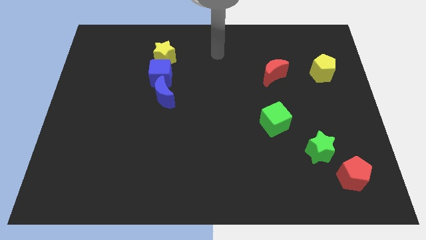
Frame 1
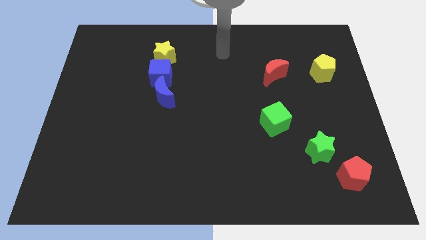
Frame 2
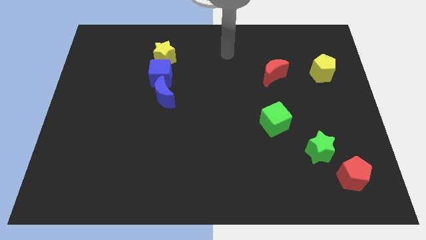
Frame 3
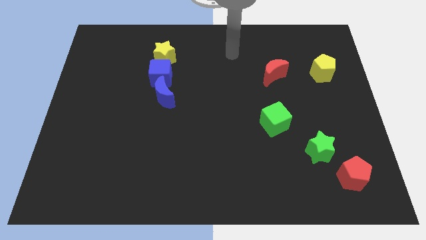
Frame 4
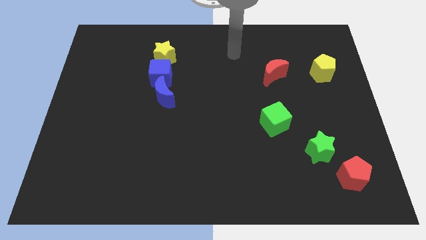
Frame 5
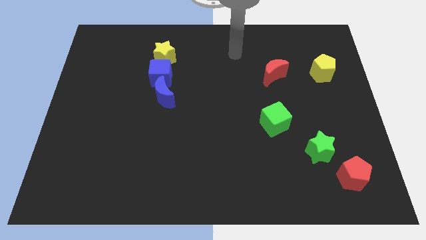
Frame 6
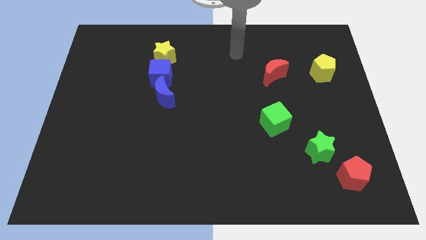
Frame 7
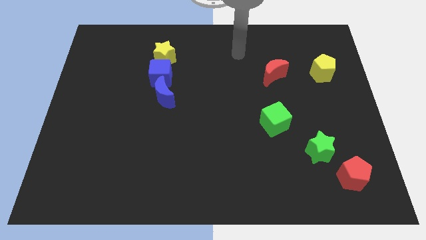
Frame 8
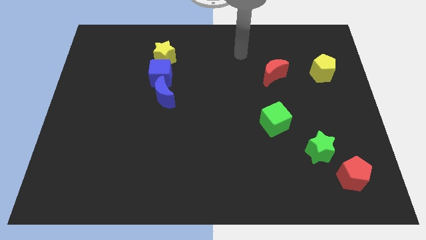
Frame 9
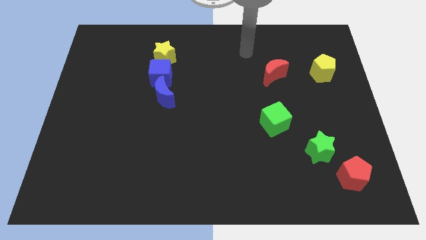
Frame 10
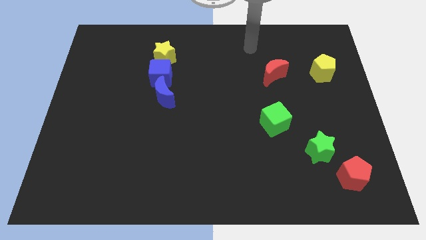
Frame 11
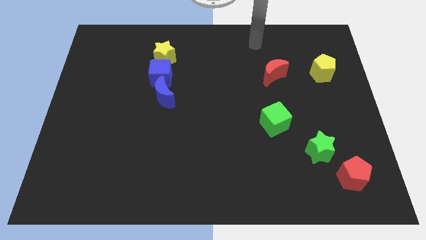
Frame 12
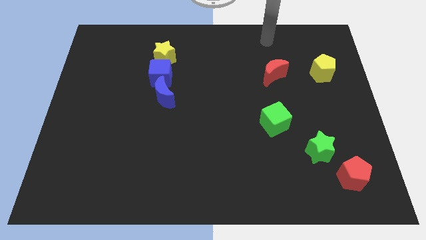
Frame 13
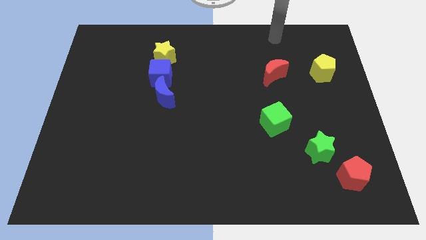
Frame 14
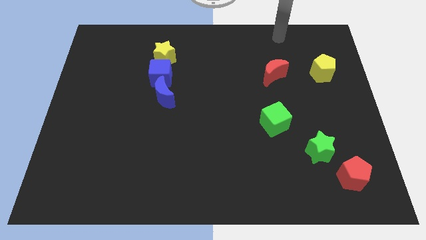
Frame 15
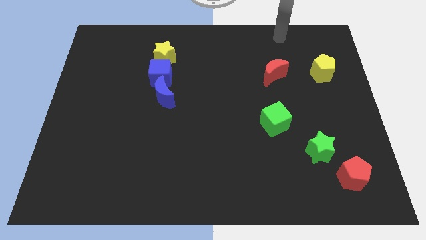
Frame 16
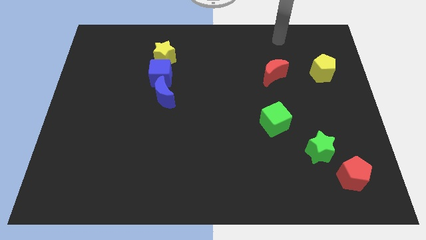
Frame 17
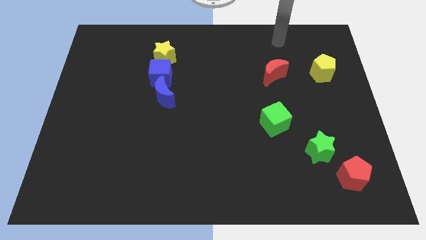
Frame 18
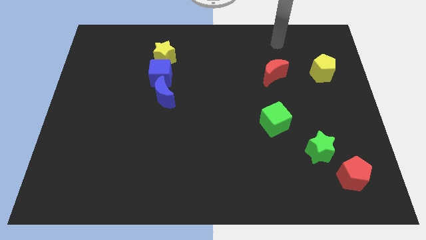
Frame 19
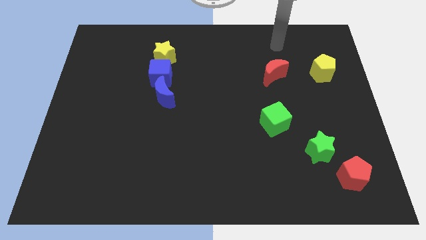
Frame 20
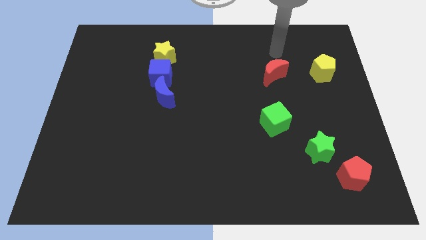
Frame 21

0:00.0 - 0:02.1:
slide your arm on top of red moon

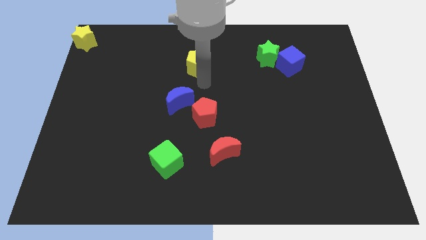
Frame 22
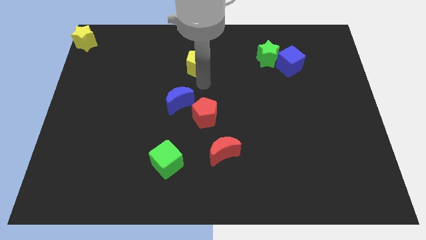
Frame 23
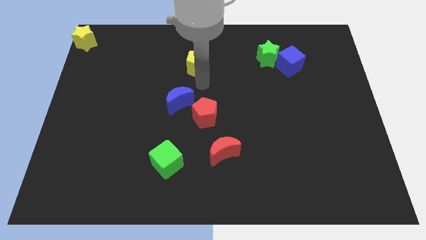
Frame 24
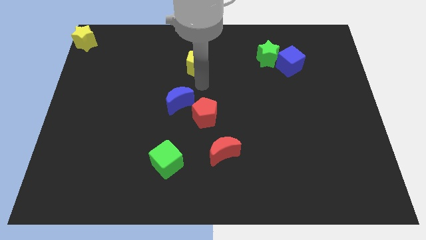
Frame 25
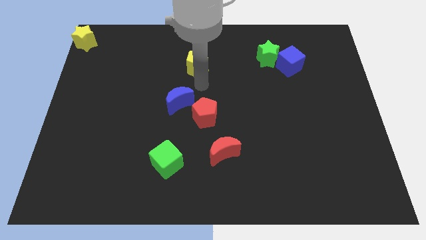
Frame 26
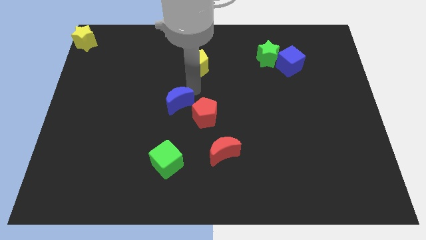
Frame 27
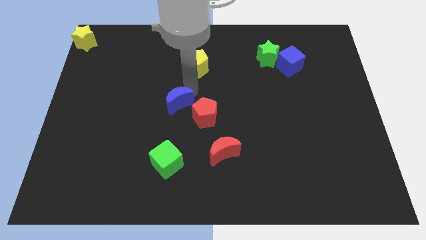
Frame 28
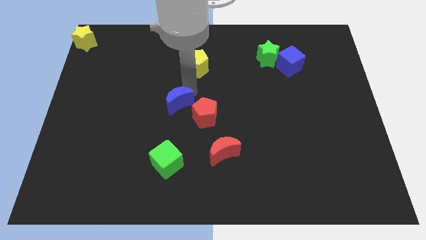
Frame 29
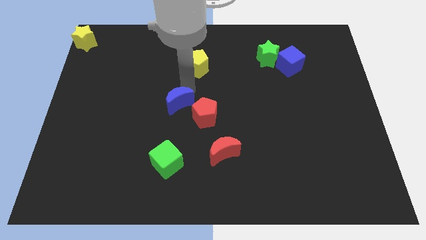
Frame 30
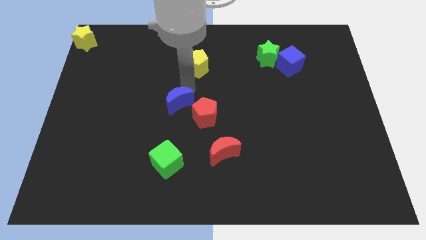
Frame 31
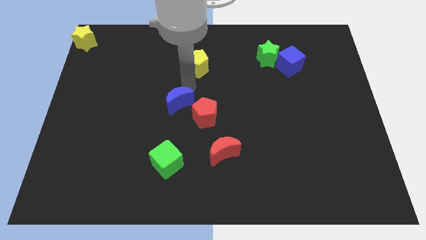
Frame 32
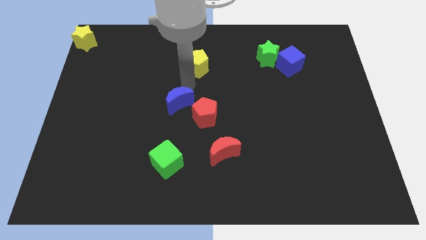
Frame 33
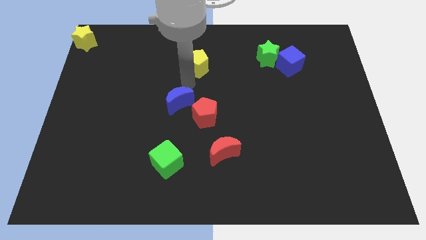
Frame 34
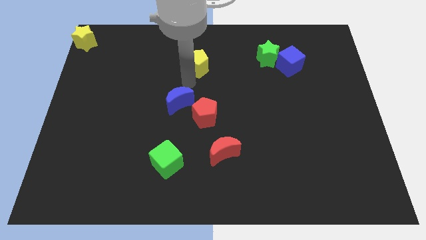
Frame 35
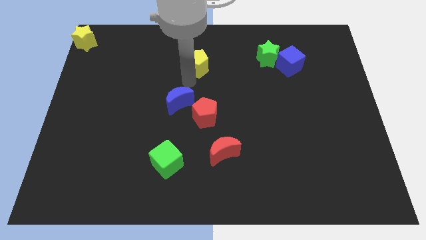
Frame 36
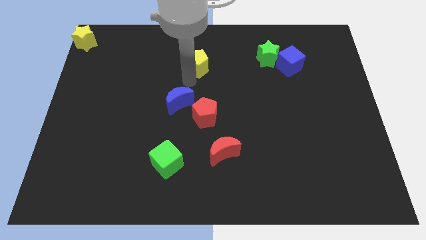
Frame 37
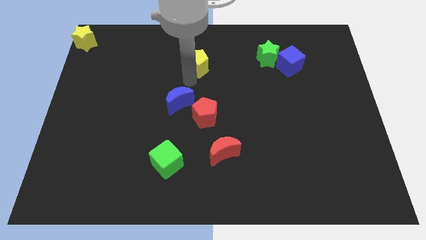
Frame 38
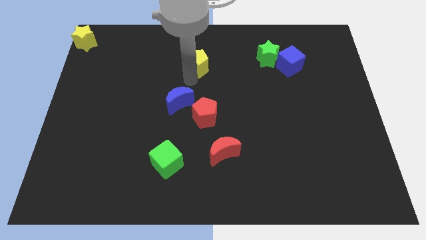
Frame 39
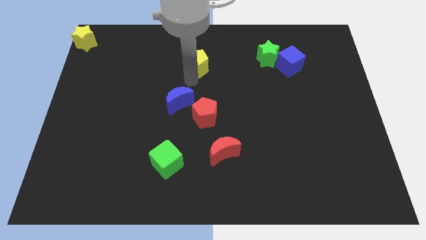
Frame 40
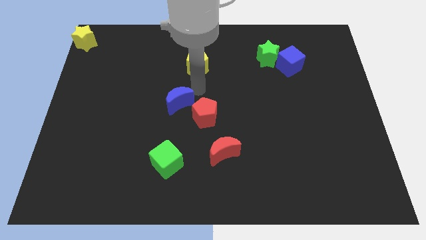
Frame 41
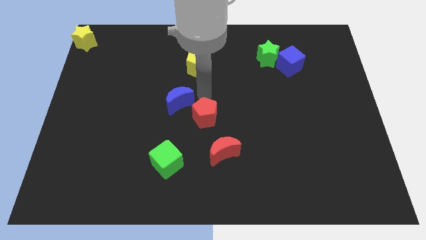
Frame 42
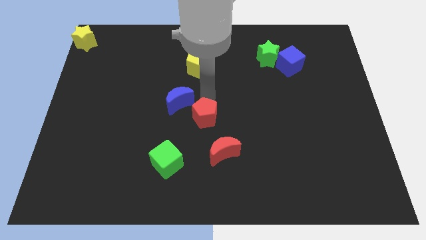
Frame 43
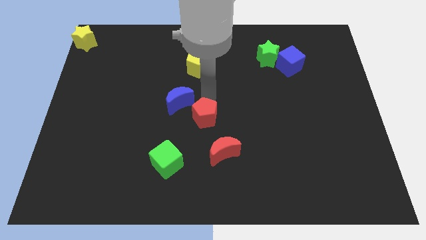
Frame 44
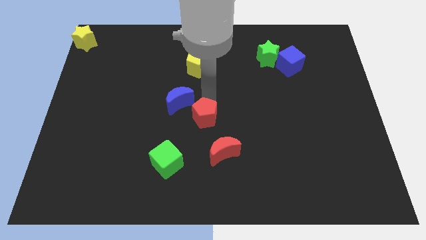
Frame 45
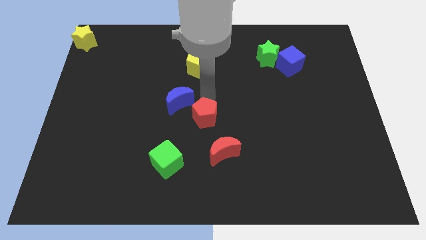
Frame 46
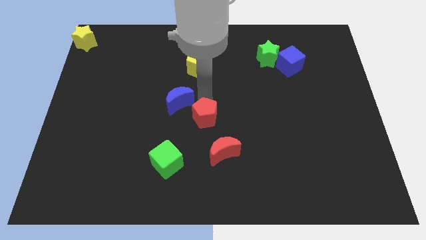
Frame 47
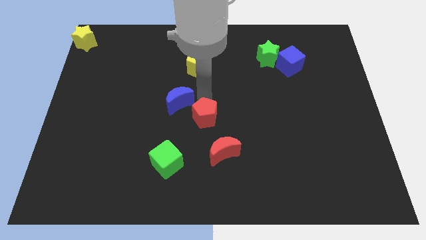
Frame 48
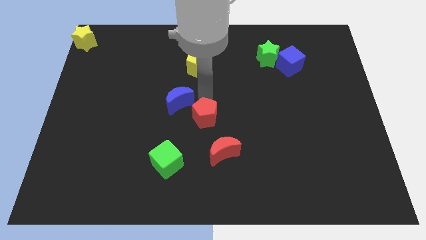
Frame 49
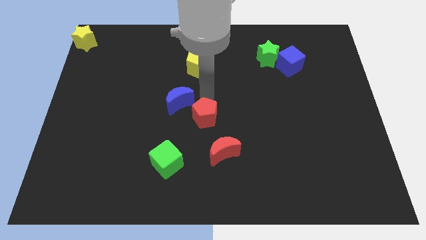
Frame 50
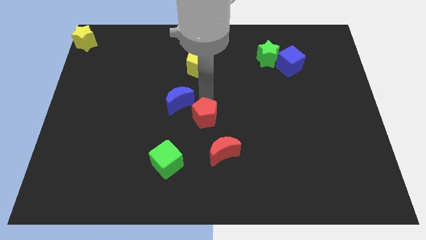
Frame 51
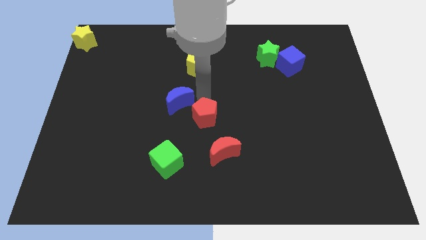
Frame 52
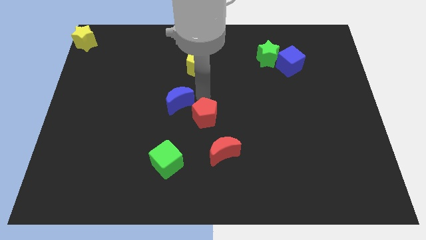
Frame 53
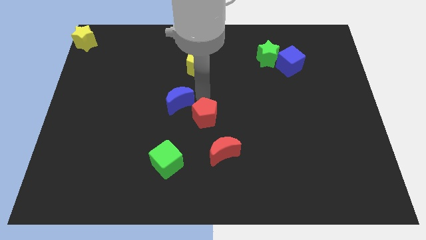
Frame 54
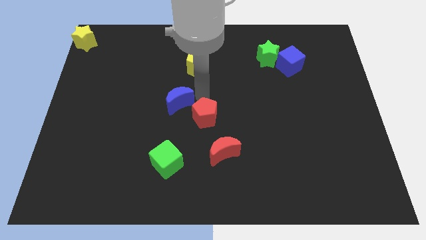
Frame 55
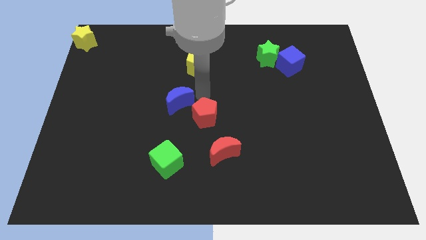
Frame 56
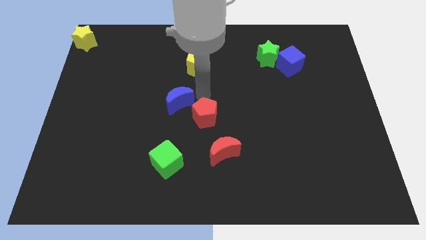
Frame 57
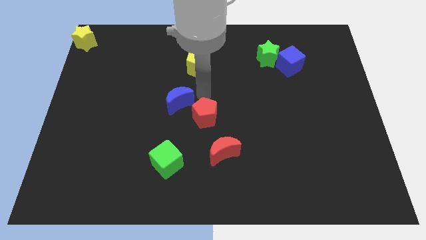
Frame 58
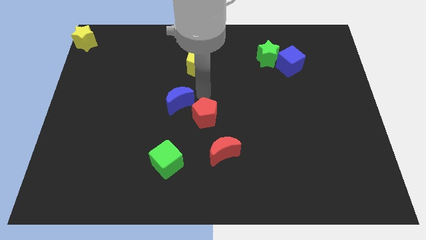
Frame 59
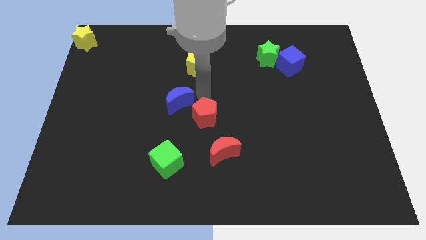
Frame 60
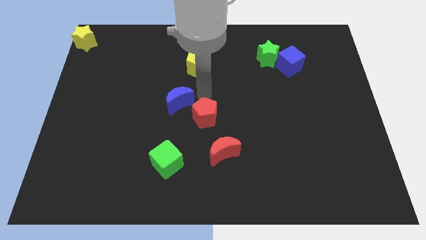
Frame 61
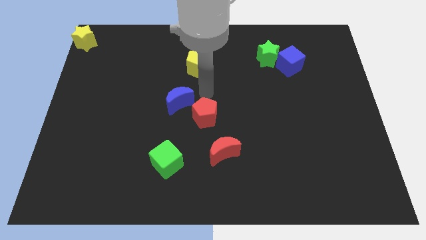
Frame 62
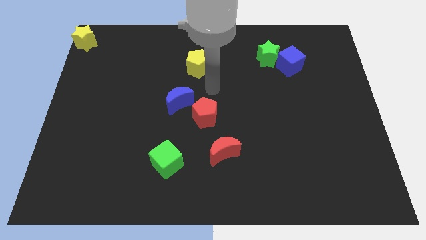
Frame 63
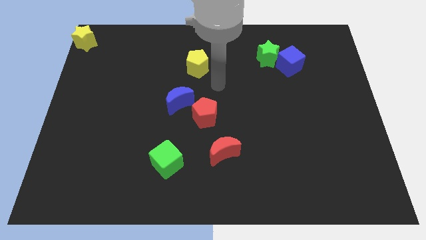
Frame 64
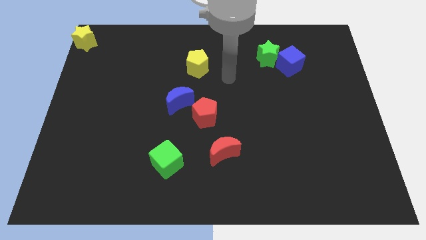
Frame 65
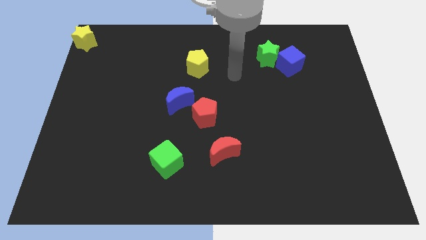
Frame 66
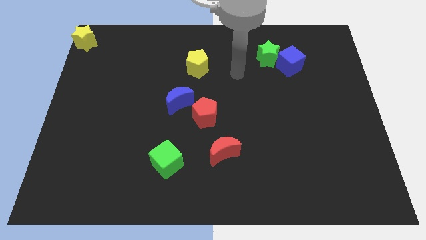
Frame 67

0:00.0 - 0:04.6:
move your arm in between the blocks at the center of the board

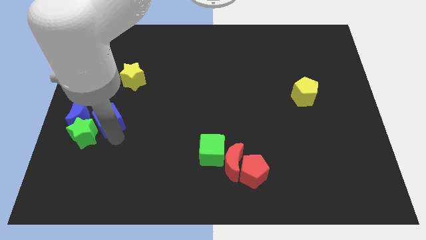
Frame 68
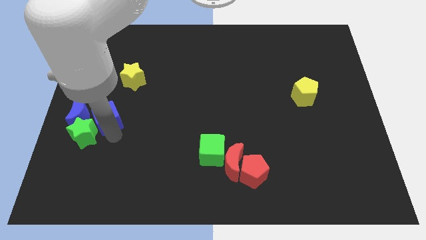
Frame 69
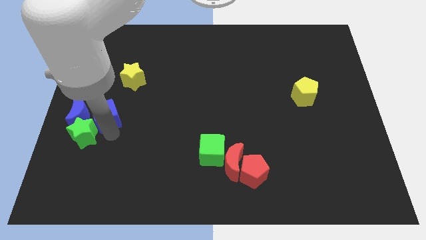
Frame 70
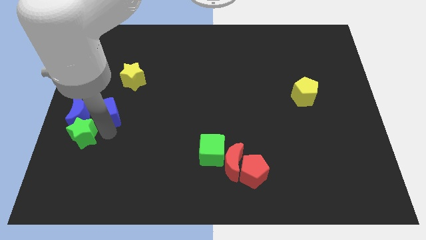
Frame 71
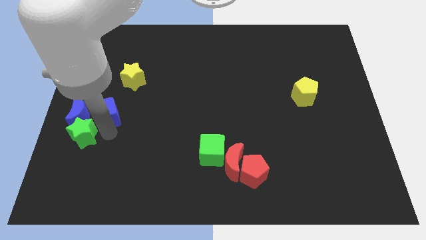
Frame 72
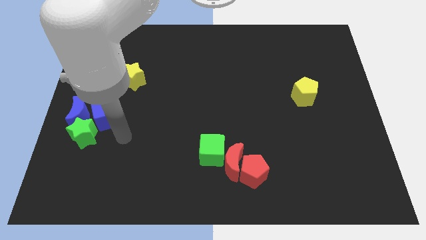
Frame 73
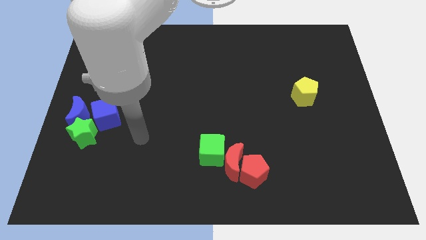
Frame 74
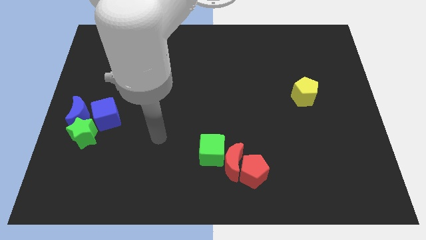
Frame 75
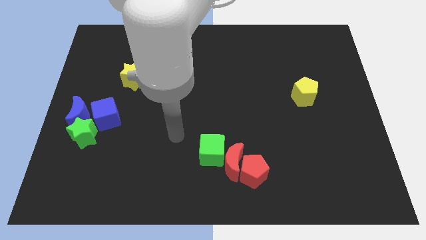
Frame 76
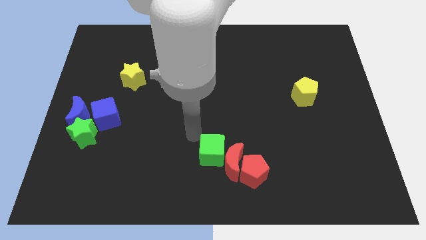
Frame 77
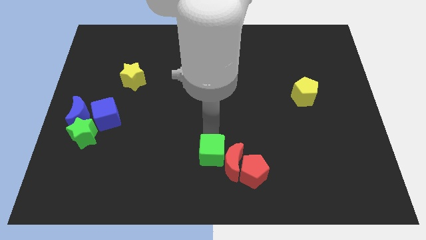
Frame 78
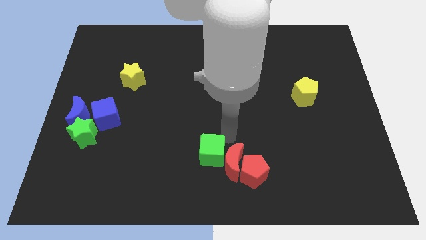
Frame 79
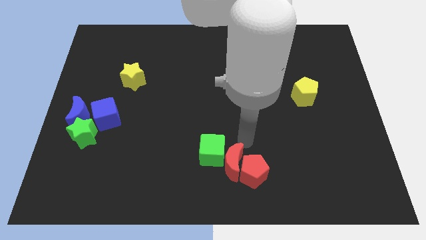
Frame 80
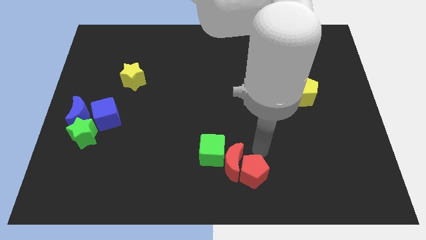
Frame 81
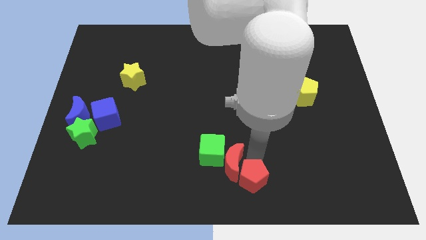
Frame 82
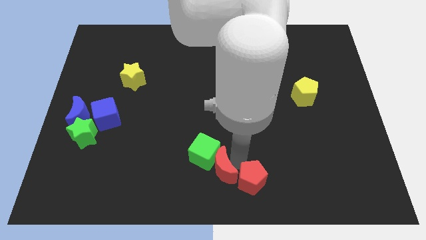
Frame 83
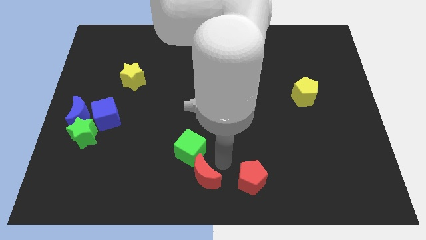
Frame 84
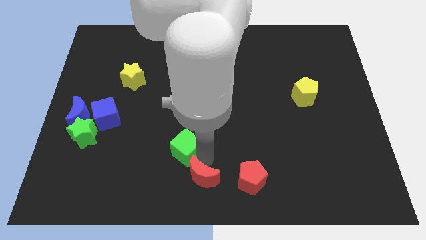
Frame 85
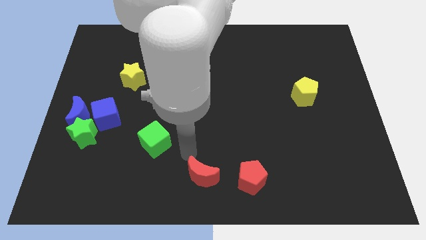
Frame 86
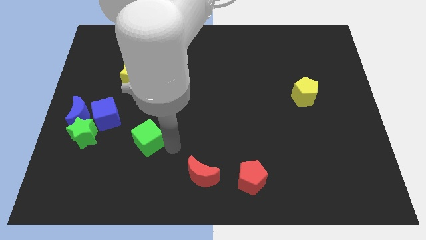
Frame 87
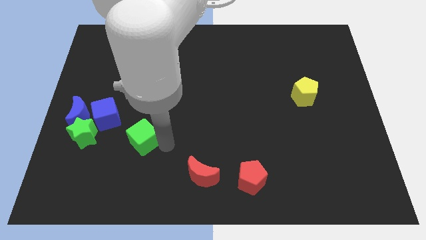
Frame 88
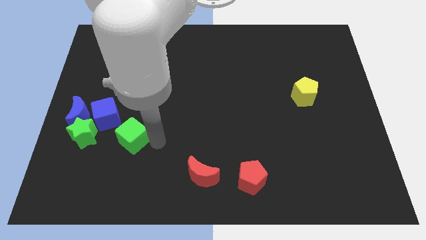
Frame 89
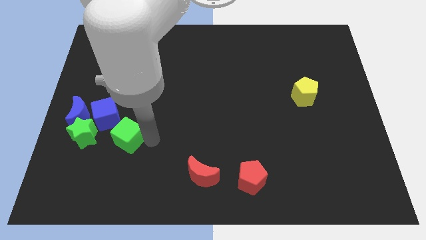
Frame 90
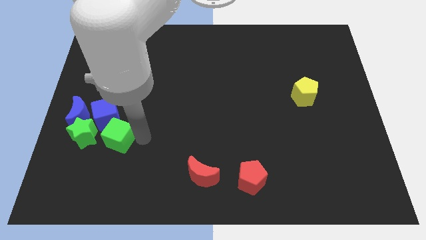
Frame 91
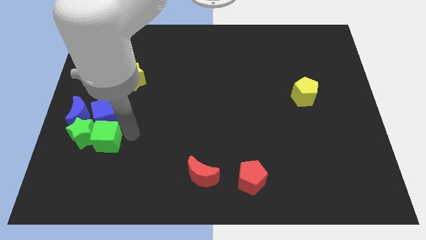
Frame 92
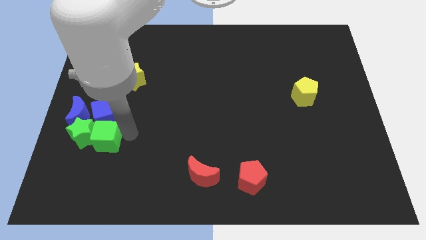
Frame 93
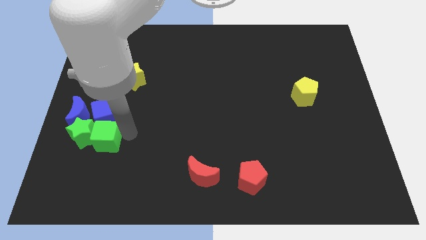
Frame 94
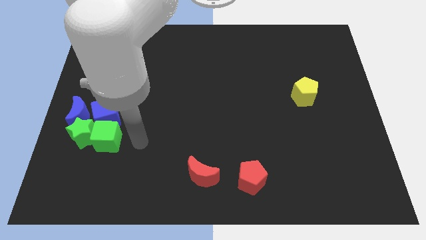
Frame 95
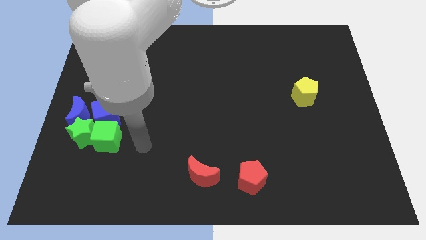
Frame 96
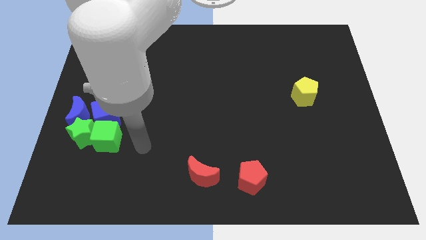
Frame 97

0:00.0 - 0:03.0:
separate the green cube from red pentagon
